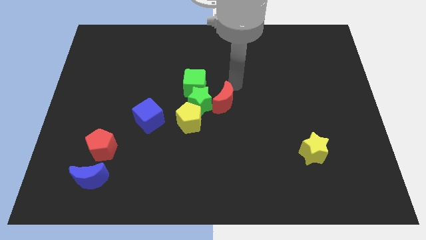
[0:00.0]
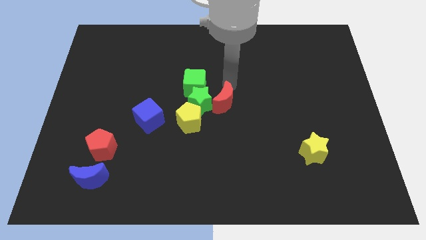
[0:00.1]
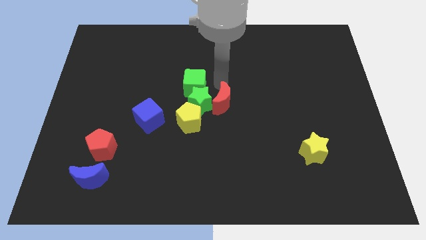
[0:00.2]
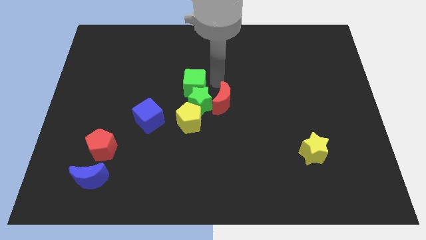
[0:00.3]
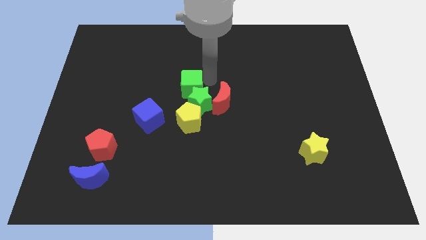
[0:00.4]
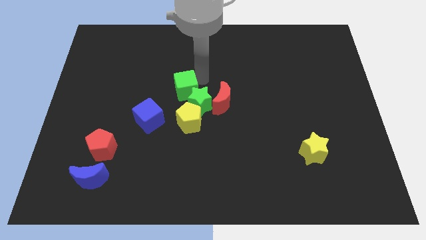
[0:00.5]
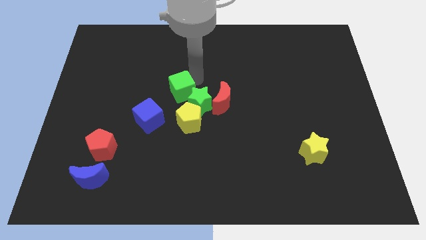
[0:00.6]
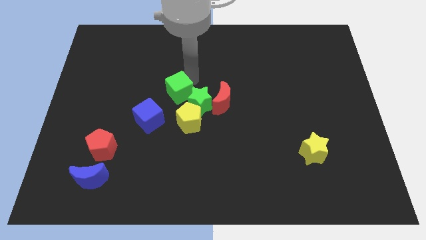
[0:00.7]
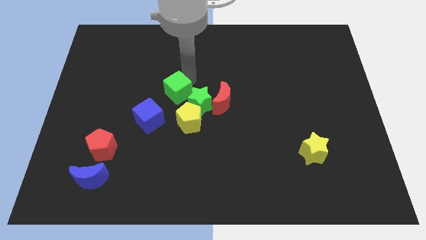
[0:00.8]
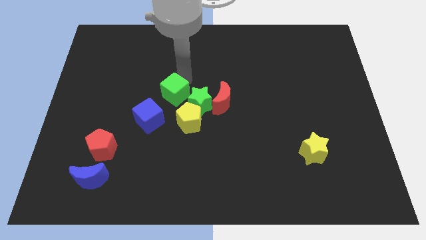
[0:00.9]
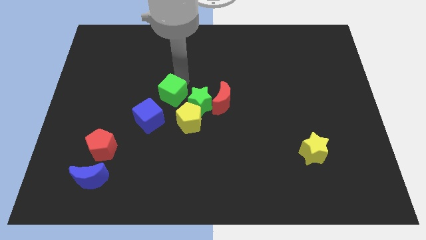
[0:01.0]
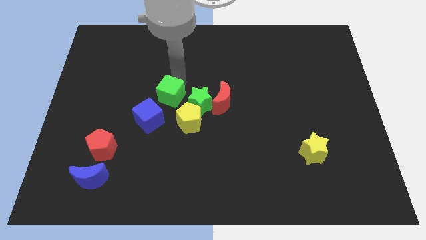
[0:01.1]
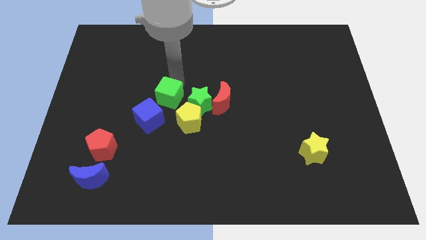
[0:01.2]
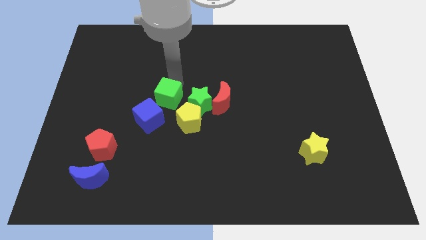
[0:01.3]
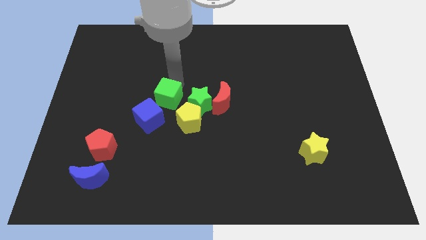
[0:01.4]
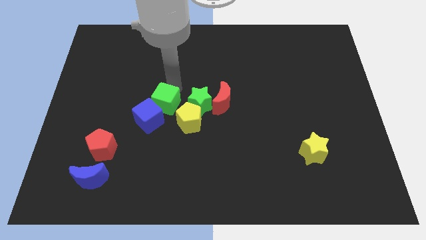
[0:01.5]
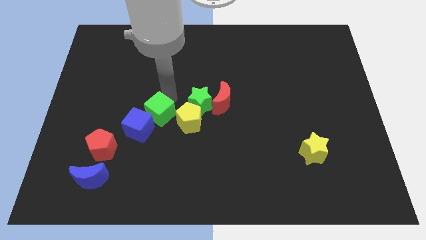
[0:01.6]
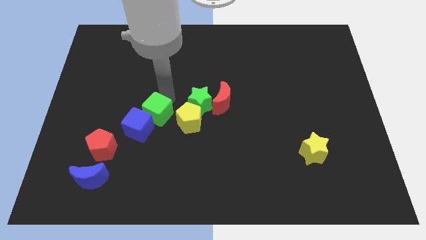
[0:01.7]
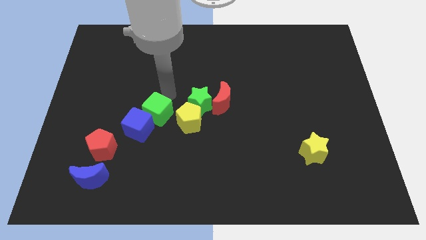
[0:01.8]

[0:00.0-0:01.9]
take the green cube into the blue cube

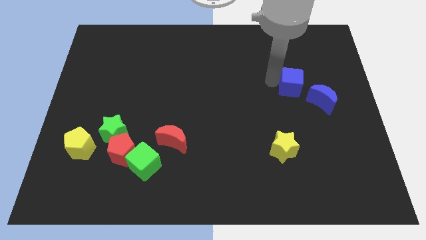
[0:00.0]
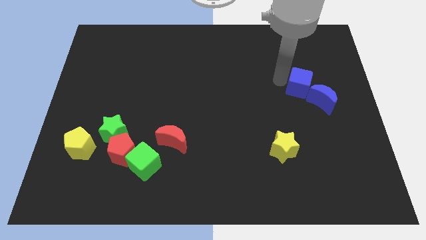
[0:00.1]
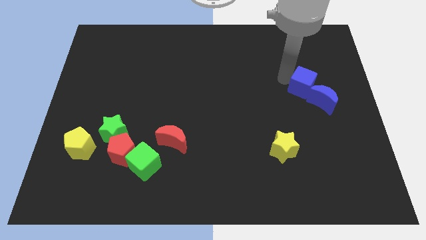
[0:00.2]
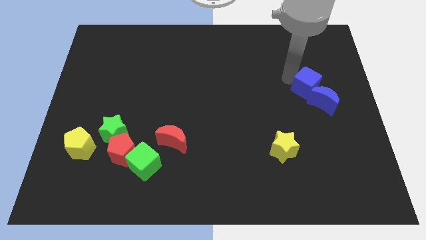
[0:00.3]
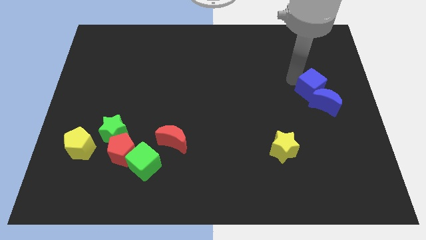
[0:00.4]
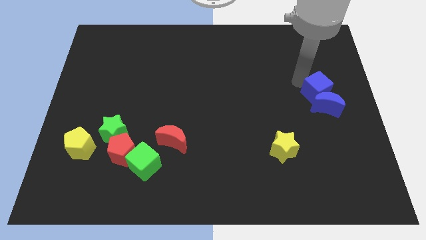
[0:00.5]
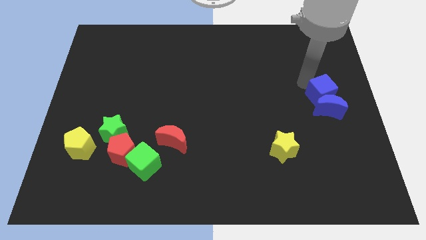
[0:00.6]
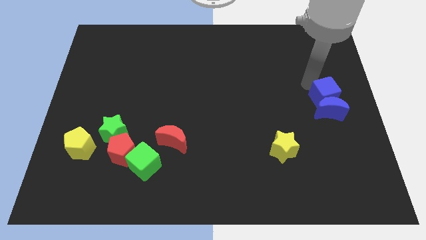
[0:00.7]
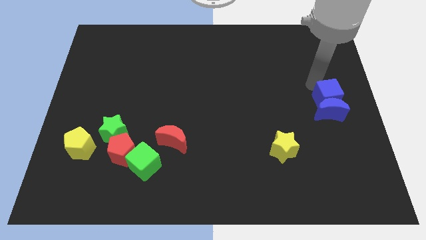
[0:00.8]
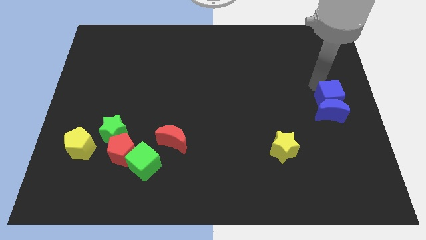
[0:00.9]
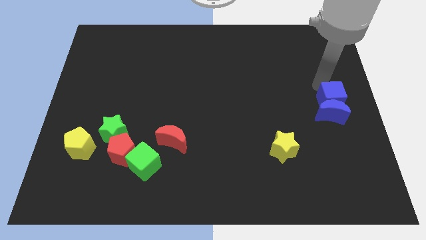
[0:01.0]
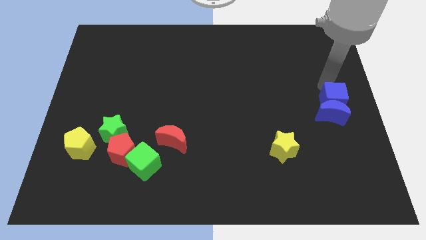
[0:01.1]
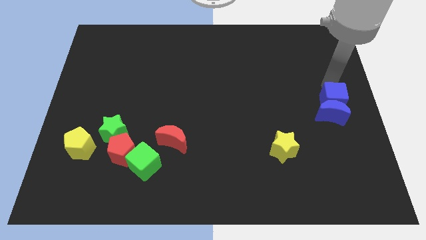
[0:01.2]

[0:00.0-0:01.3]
push blue cube above blue crescent

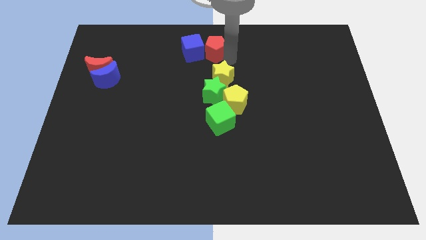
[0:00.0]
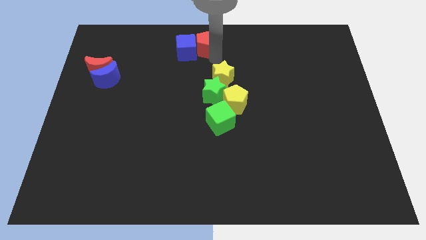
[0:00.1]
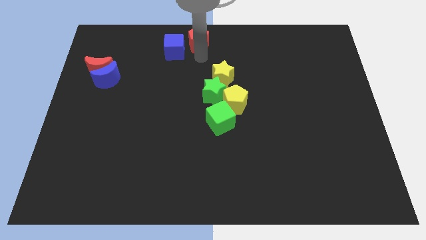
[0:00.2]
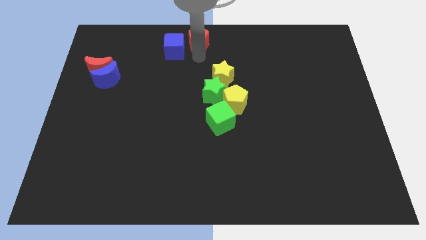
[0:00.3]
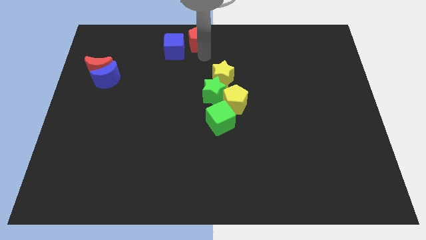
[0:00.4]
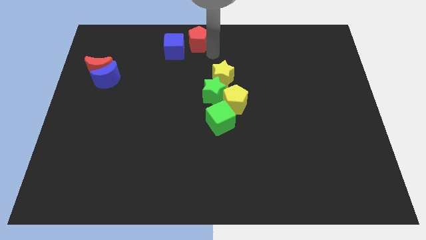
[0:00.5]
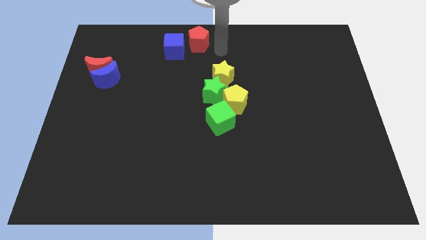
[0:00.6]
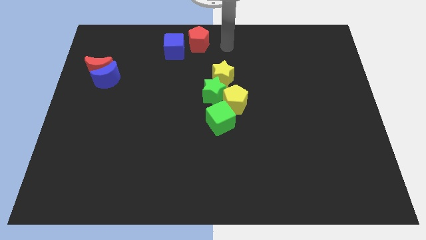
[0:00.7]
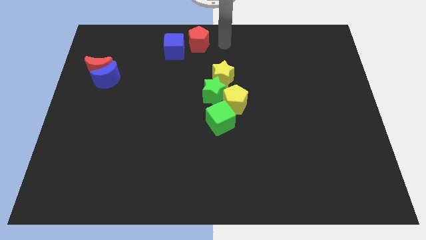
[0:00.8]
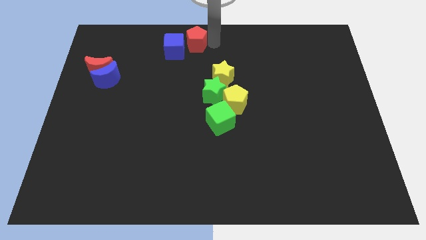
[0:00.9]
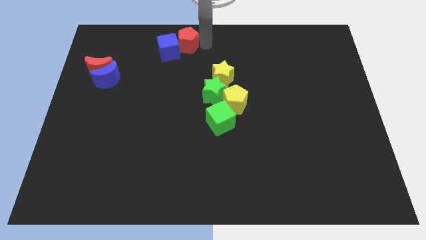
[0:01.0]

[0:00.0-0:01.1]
push the red pentagon into the blue cube

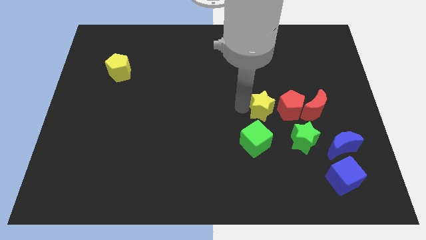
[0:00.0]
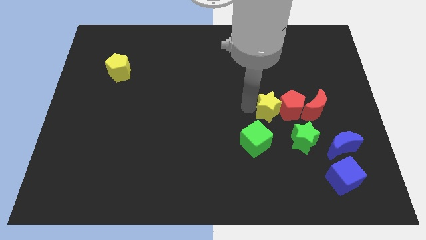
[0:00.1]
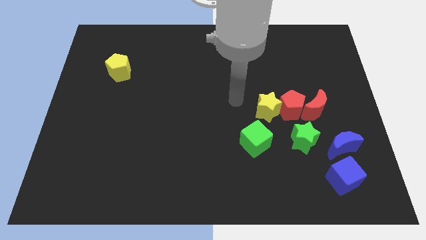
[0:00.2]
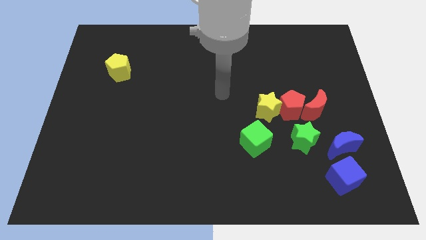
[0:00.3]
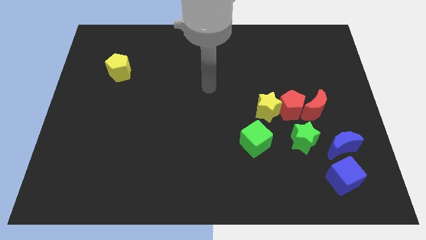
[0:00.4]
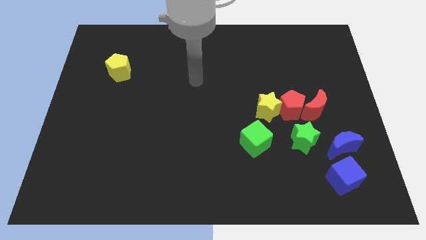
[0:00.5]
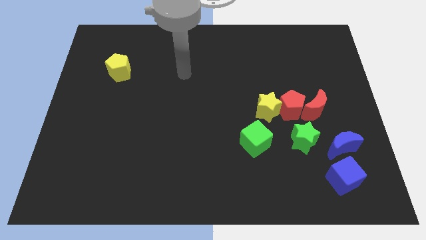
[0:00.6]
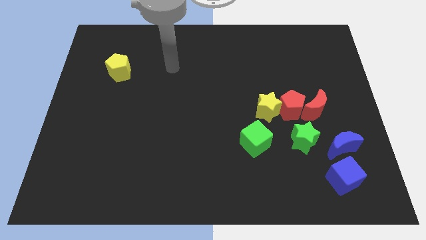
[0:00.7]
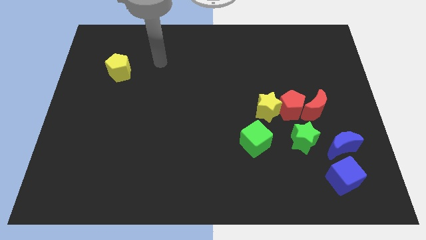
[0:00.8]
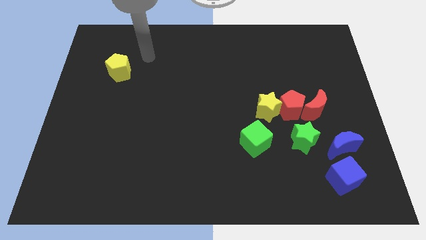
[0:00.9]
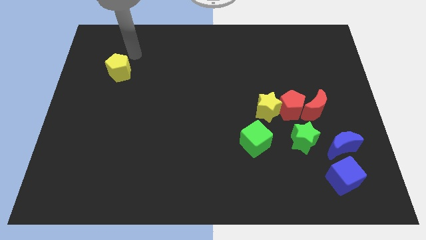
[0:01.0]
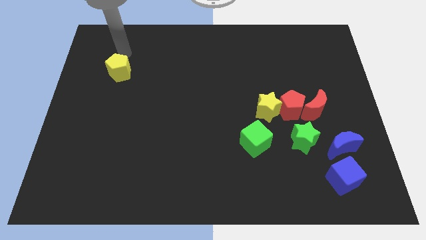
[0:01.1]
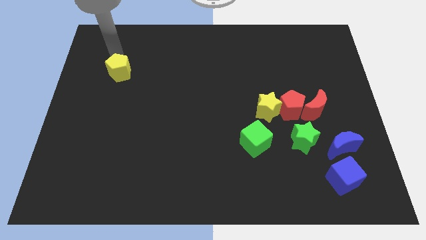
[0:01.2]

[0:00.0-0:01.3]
place arm on the top of yellow pentagon

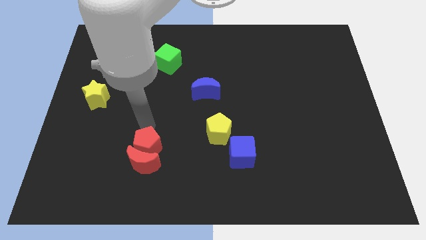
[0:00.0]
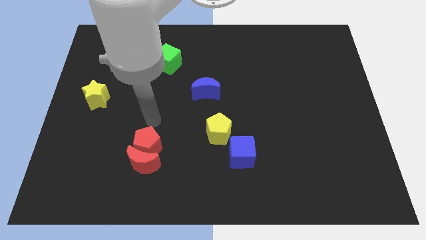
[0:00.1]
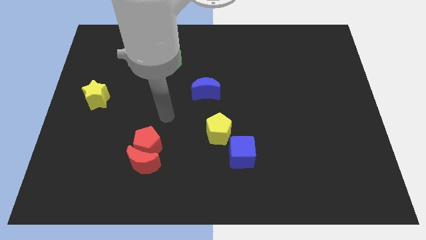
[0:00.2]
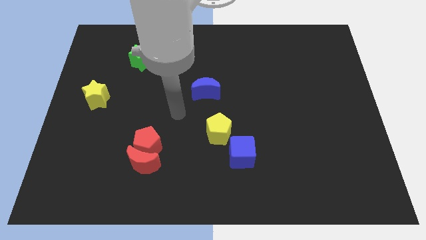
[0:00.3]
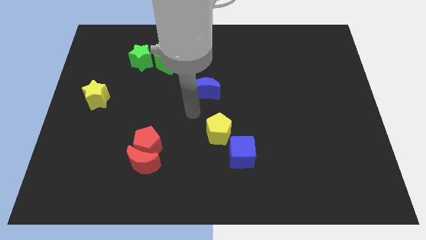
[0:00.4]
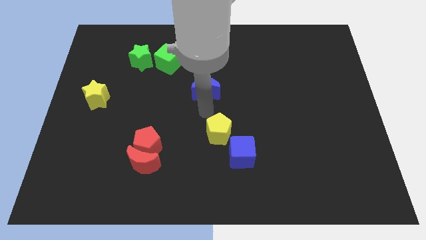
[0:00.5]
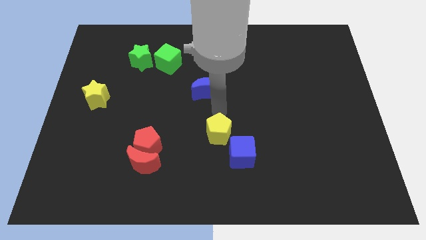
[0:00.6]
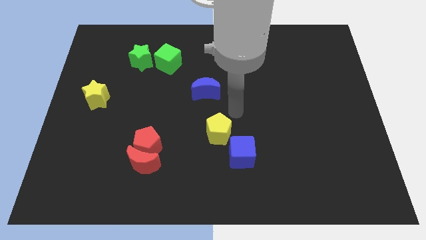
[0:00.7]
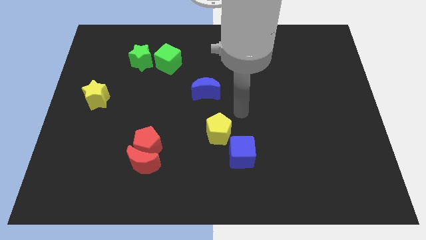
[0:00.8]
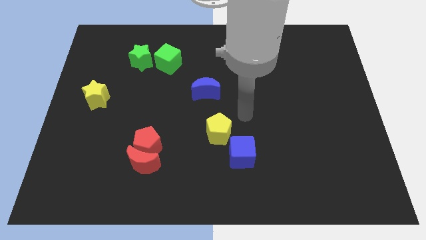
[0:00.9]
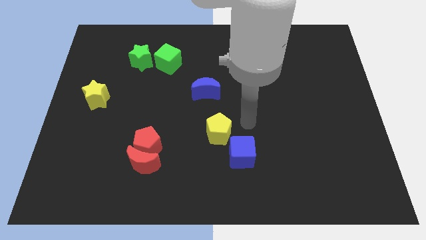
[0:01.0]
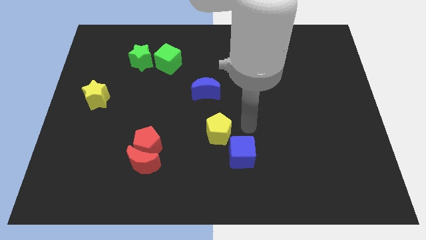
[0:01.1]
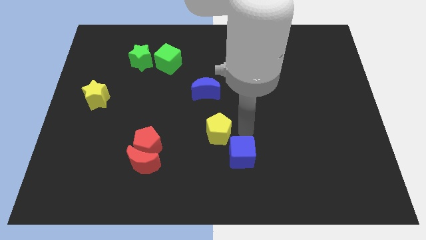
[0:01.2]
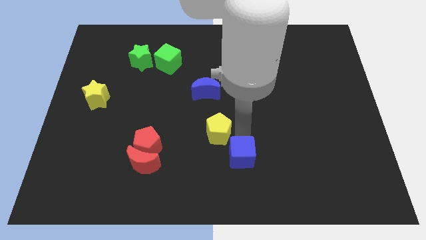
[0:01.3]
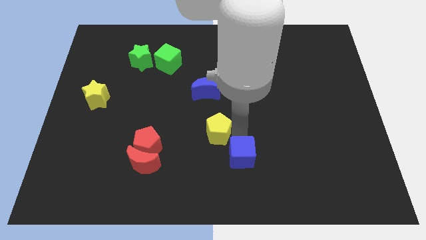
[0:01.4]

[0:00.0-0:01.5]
place your arm at the top of the blue cube

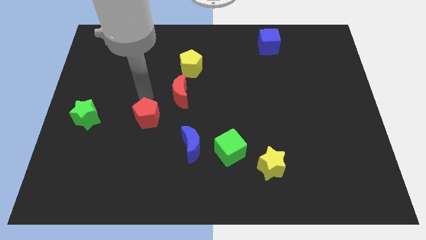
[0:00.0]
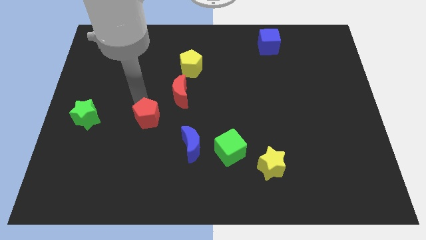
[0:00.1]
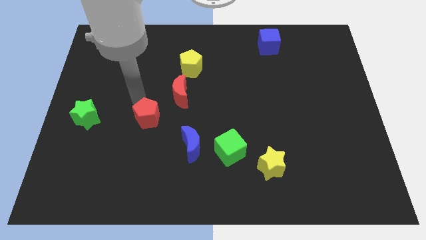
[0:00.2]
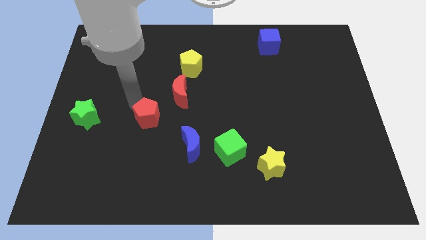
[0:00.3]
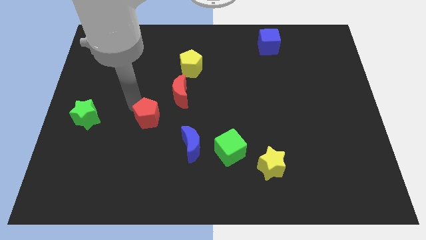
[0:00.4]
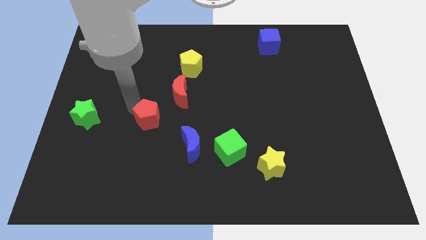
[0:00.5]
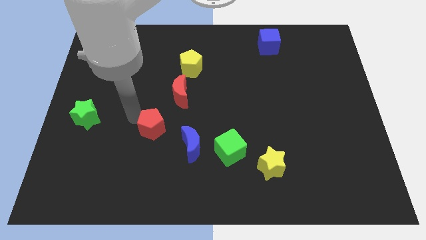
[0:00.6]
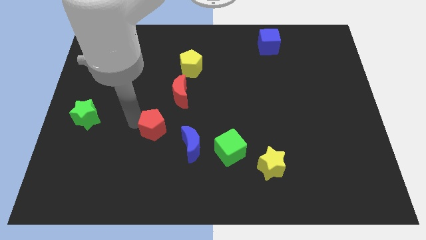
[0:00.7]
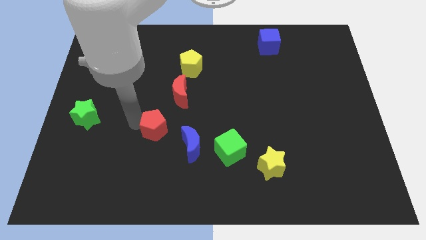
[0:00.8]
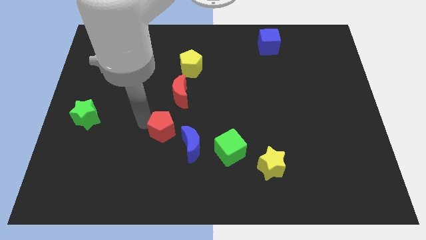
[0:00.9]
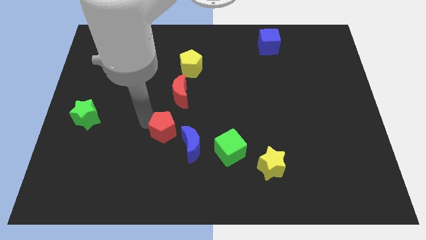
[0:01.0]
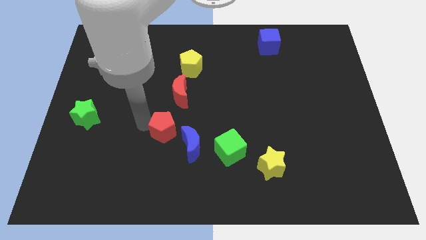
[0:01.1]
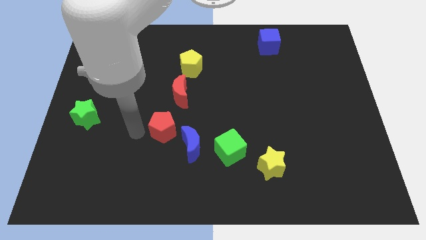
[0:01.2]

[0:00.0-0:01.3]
push the red pentagon downwards slightly

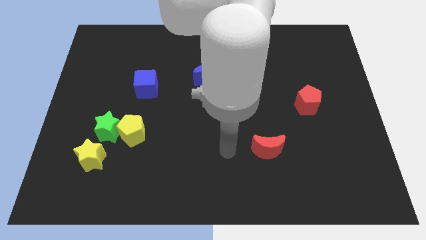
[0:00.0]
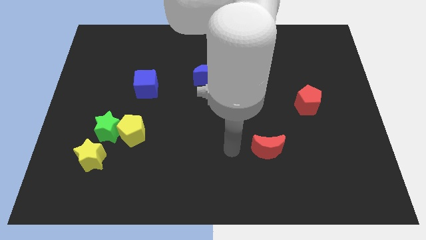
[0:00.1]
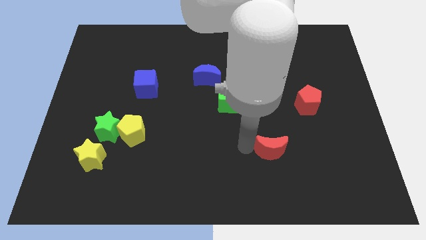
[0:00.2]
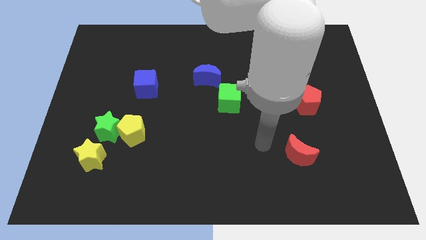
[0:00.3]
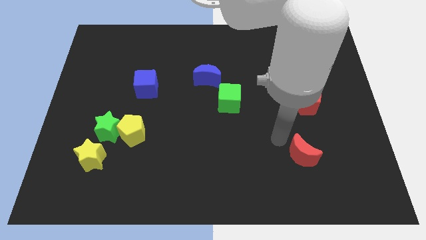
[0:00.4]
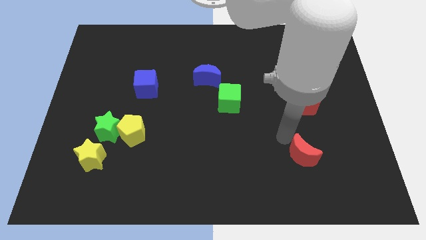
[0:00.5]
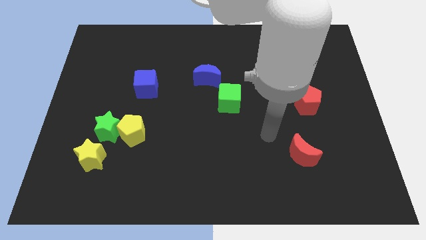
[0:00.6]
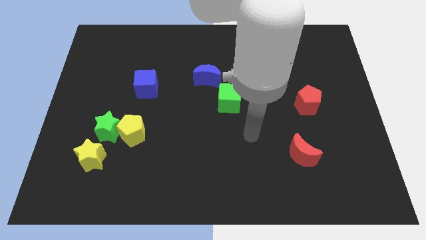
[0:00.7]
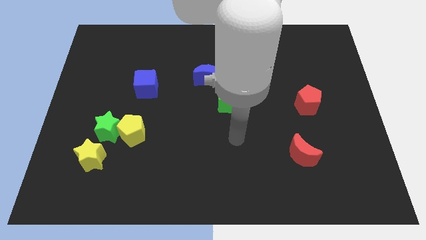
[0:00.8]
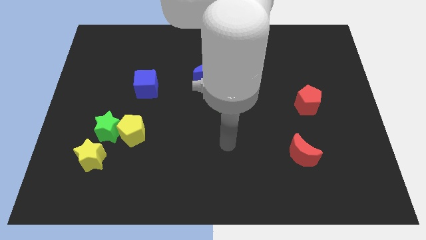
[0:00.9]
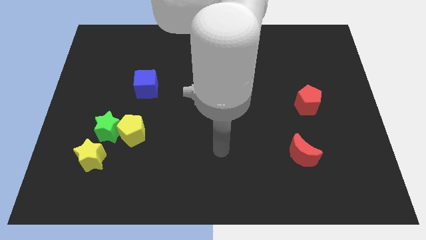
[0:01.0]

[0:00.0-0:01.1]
push the red crescent to the bottom of the red pentagon
